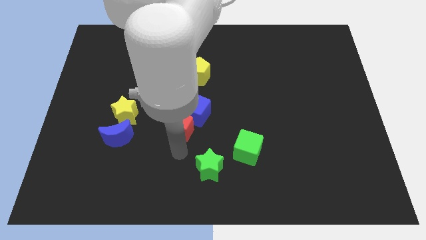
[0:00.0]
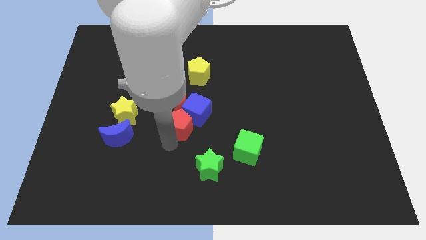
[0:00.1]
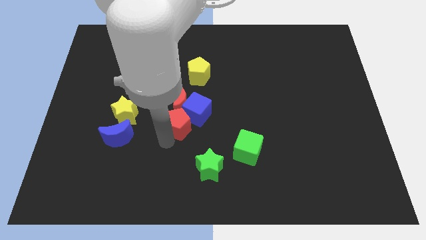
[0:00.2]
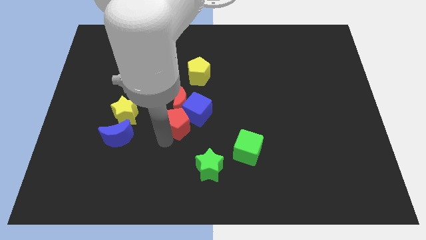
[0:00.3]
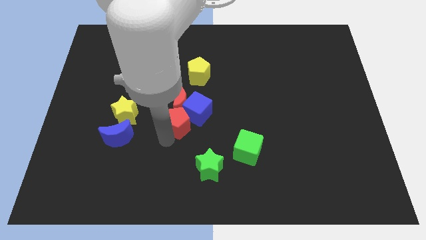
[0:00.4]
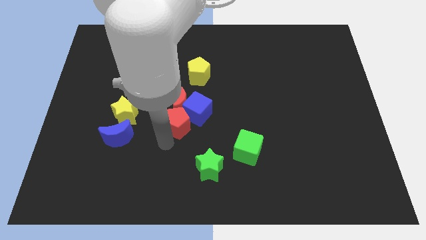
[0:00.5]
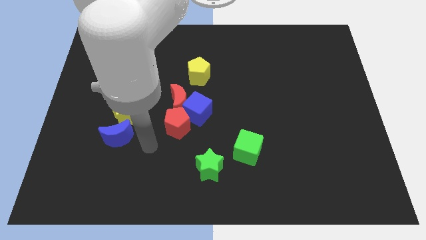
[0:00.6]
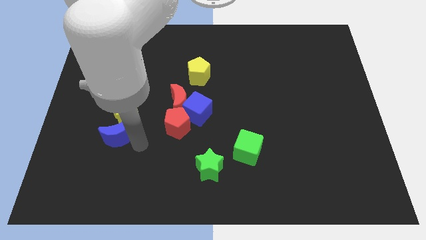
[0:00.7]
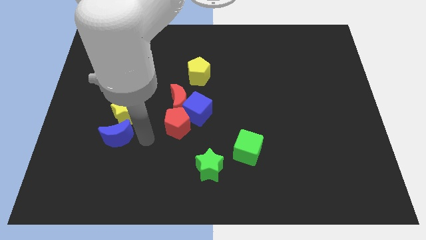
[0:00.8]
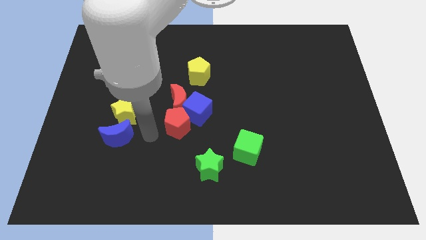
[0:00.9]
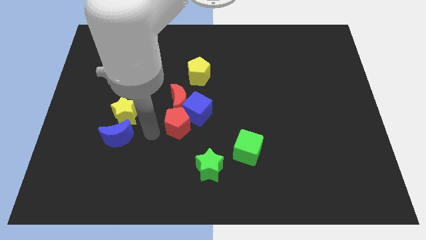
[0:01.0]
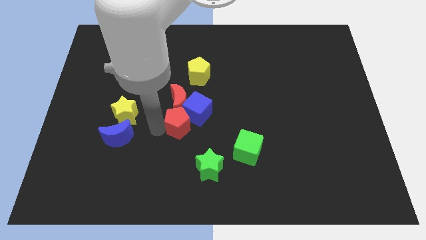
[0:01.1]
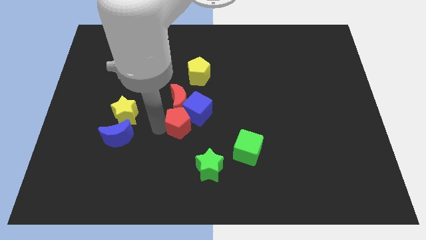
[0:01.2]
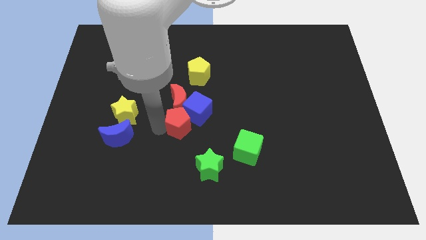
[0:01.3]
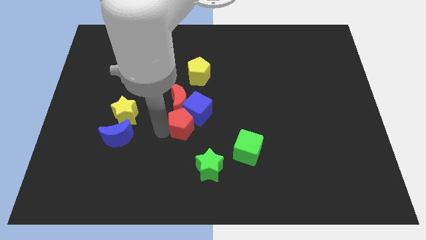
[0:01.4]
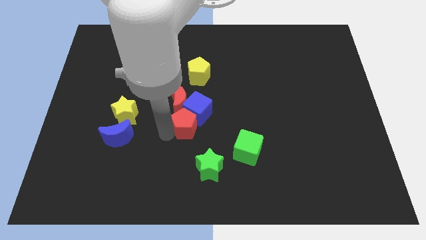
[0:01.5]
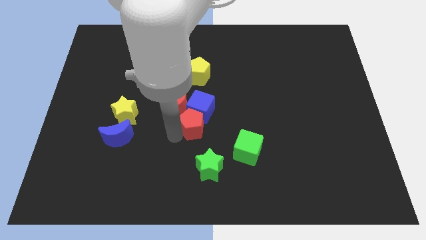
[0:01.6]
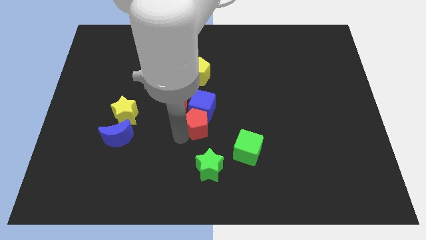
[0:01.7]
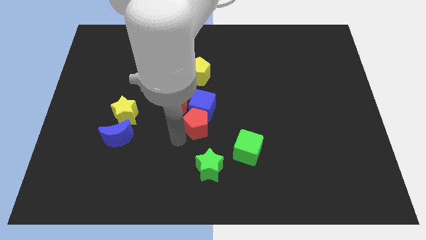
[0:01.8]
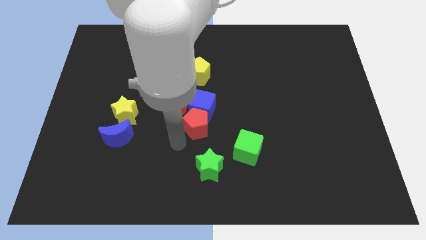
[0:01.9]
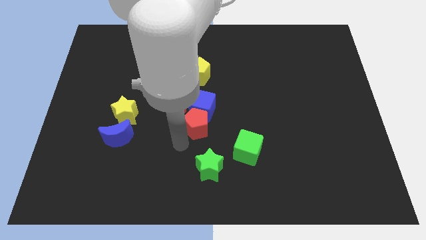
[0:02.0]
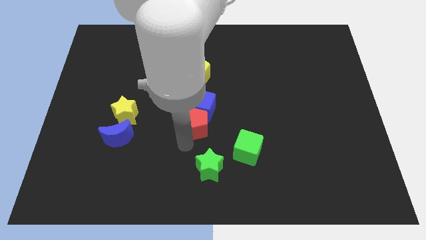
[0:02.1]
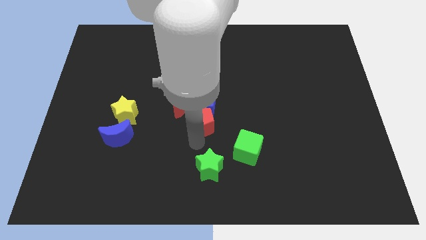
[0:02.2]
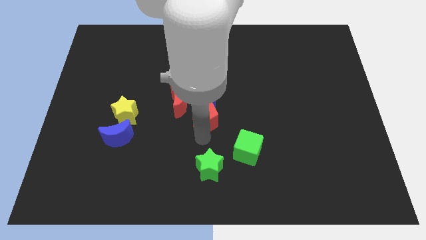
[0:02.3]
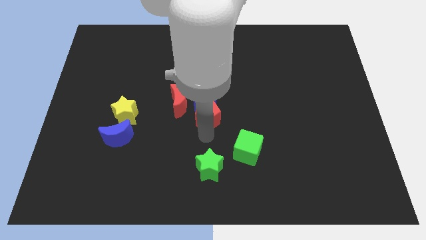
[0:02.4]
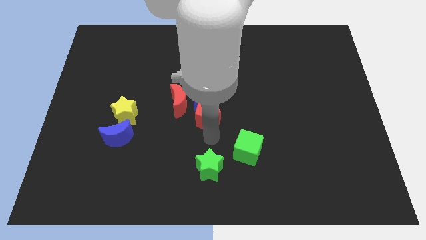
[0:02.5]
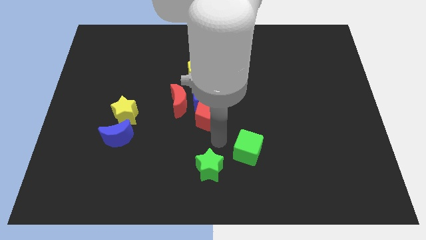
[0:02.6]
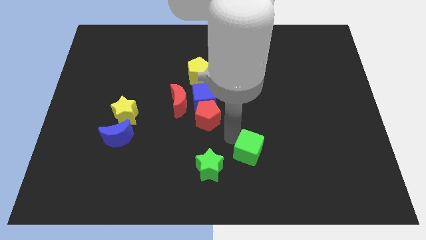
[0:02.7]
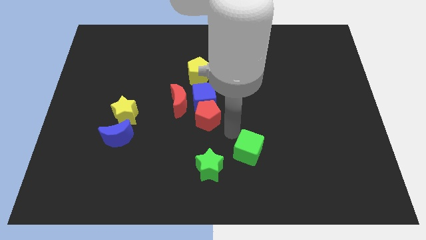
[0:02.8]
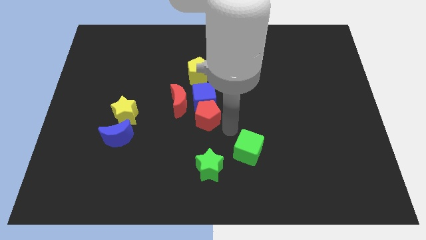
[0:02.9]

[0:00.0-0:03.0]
move the red pentagon below to the blue cube

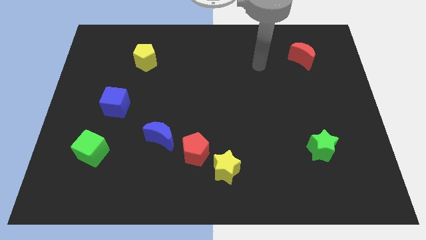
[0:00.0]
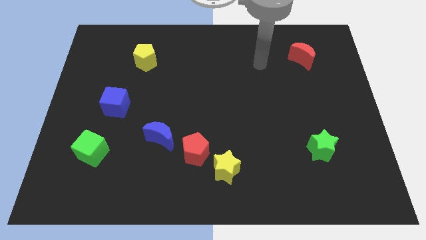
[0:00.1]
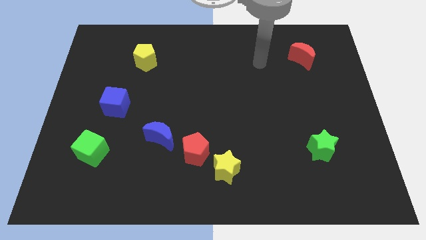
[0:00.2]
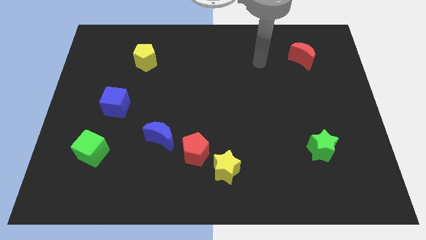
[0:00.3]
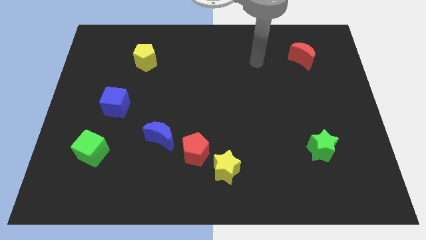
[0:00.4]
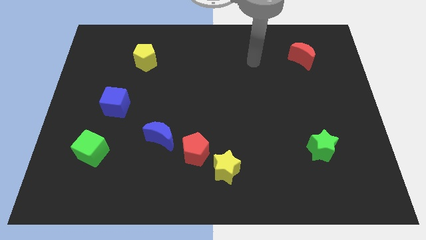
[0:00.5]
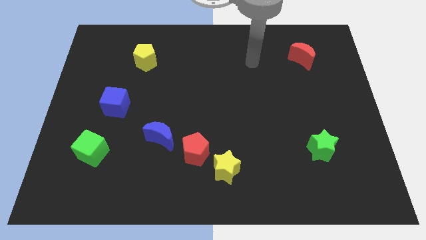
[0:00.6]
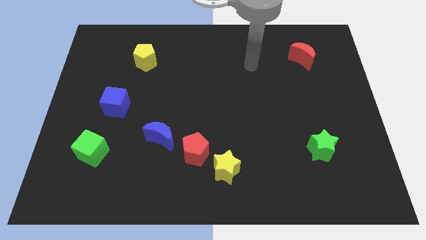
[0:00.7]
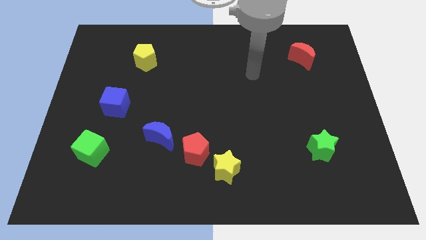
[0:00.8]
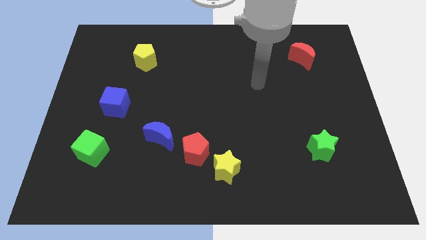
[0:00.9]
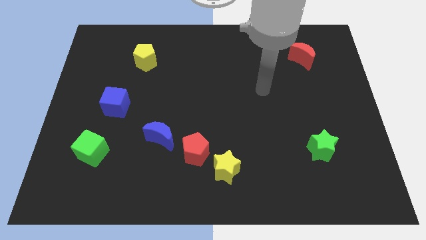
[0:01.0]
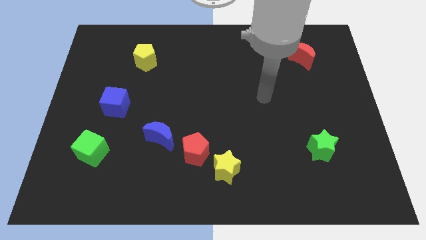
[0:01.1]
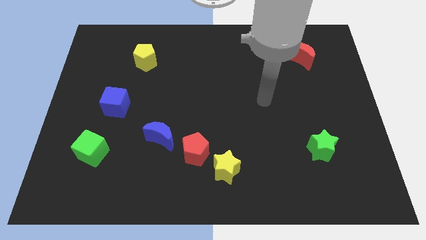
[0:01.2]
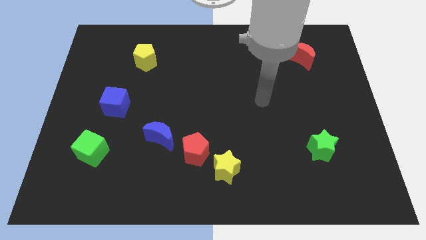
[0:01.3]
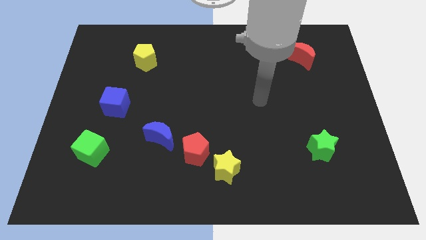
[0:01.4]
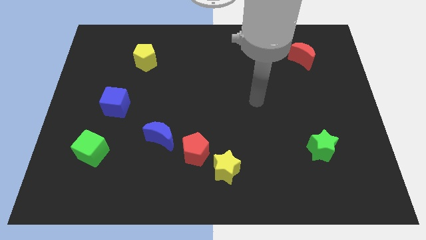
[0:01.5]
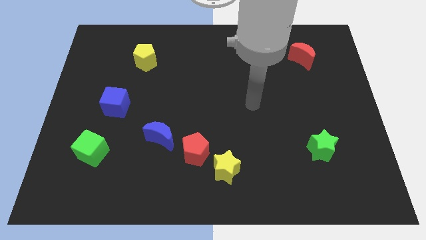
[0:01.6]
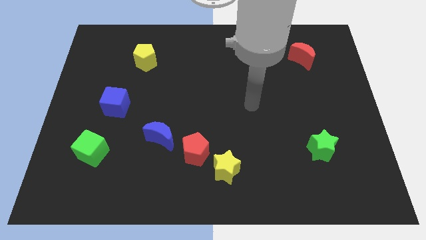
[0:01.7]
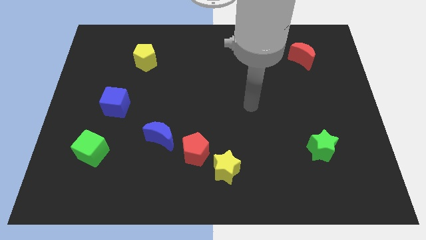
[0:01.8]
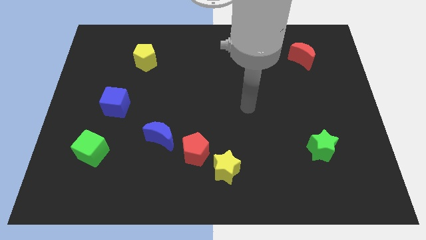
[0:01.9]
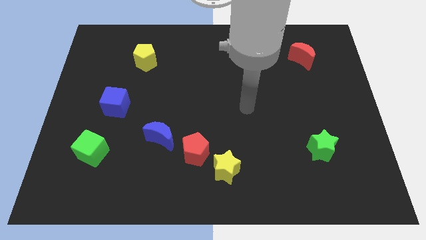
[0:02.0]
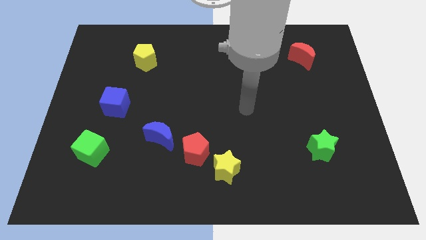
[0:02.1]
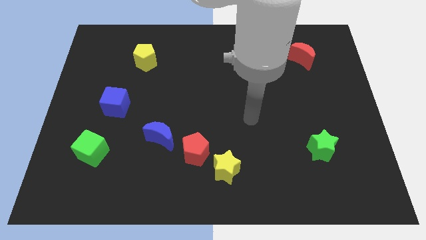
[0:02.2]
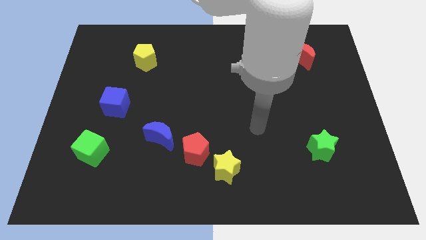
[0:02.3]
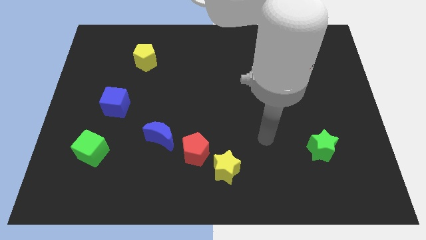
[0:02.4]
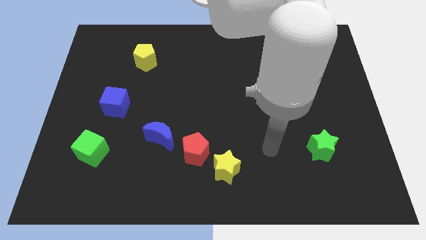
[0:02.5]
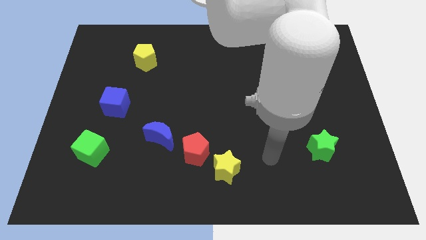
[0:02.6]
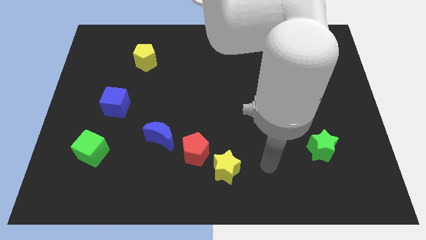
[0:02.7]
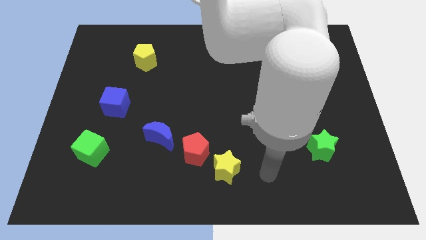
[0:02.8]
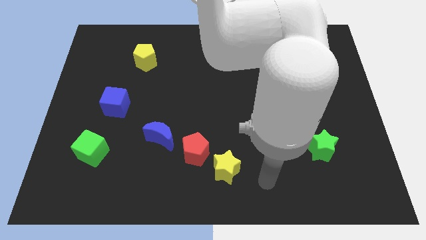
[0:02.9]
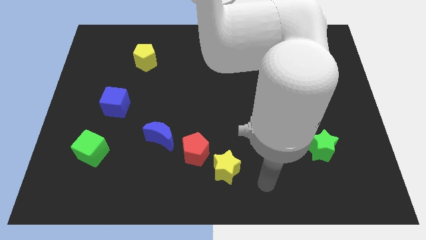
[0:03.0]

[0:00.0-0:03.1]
slide your arm to the right of yellow star

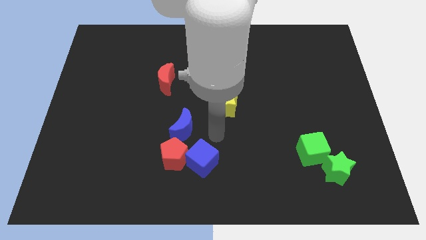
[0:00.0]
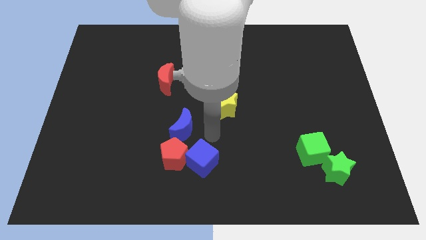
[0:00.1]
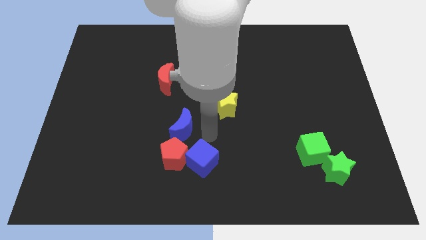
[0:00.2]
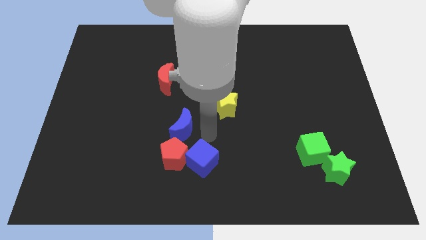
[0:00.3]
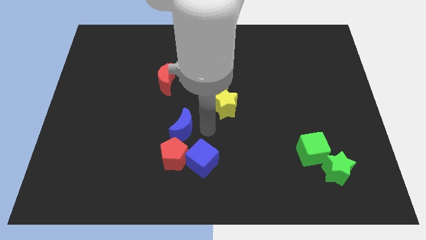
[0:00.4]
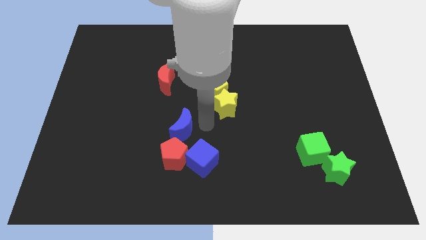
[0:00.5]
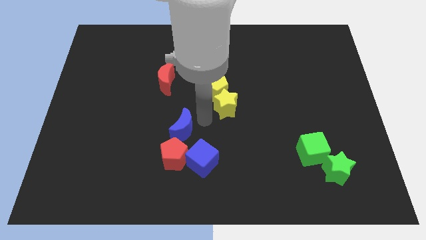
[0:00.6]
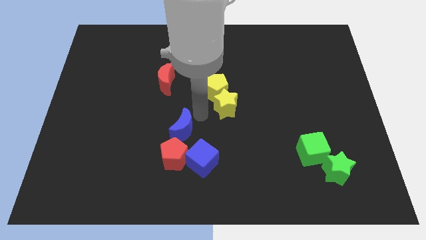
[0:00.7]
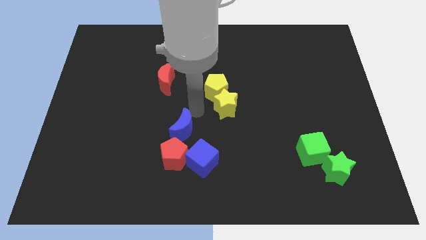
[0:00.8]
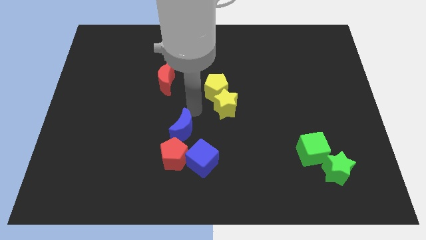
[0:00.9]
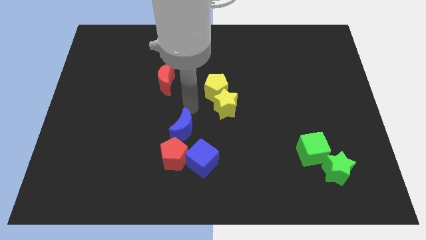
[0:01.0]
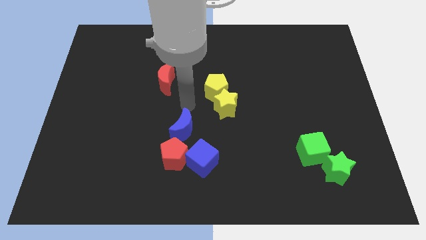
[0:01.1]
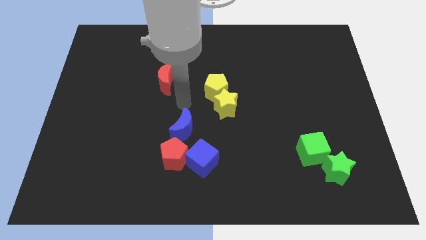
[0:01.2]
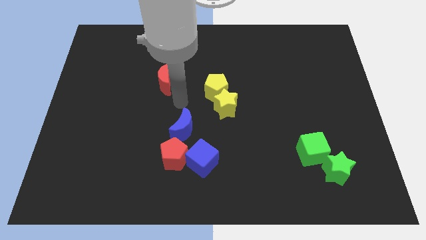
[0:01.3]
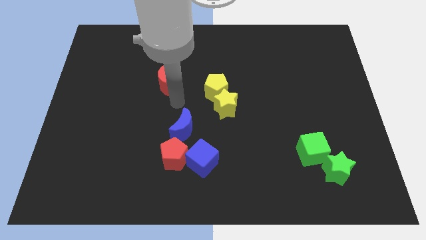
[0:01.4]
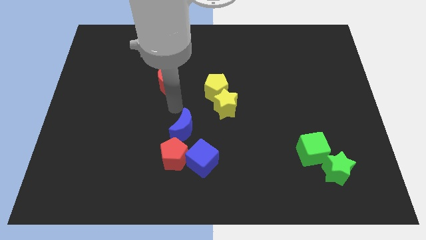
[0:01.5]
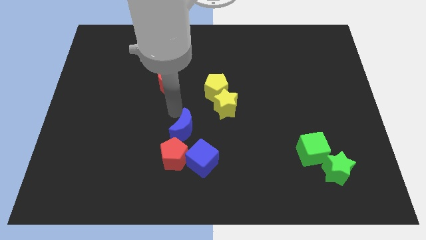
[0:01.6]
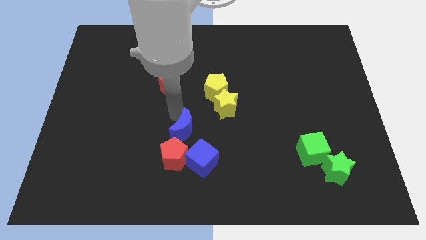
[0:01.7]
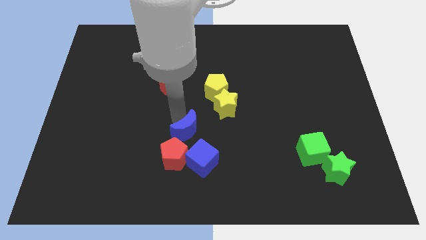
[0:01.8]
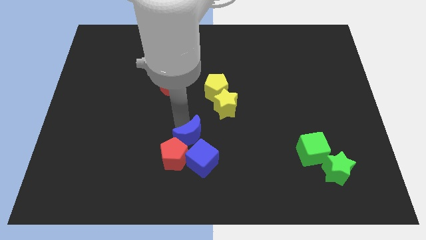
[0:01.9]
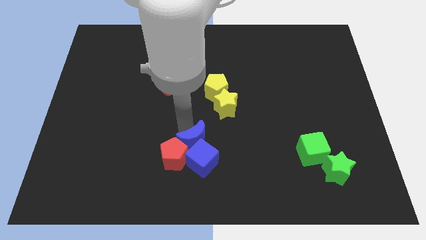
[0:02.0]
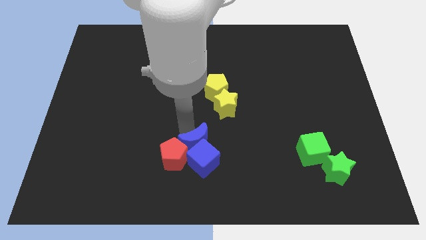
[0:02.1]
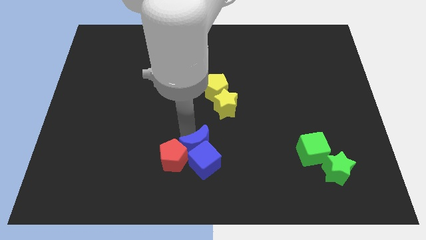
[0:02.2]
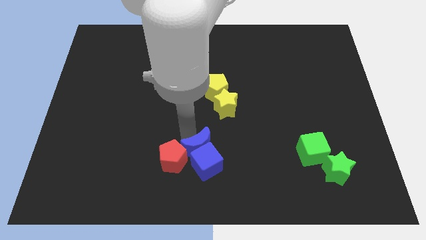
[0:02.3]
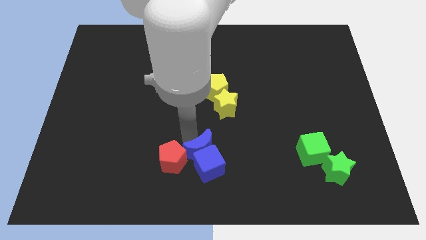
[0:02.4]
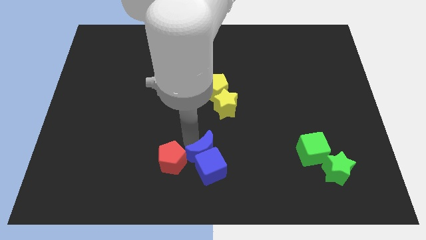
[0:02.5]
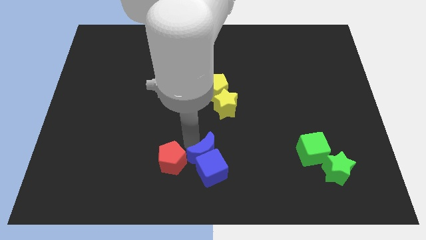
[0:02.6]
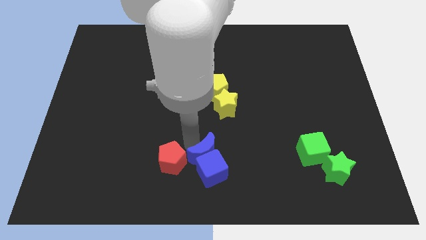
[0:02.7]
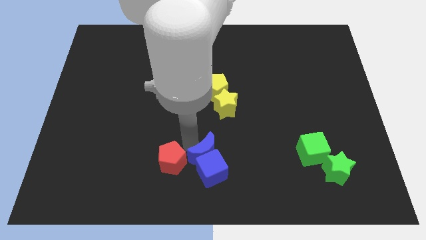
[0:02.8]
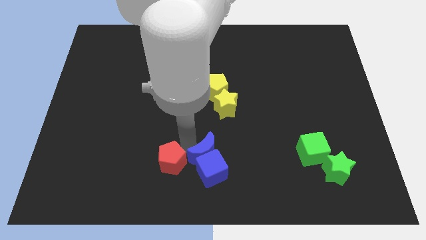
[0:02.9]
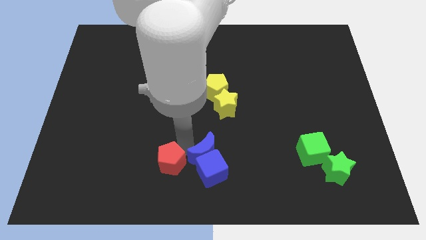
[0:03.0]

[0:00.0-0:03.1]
slightly push the blue crescent with blue cube to the bottom side of the board
